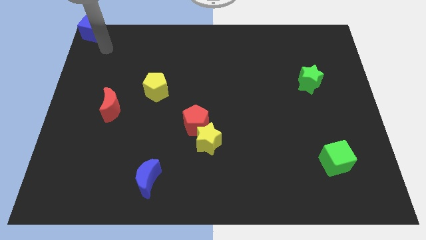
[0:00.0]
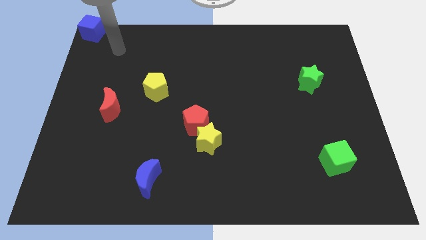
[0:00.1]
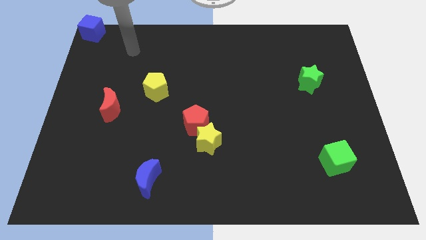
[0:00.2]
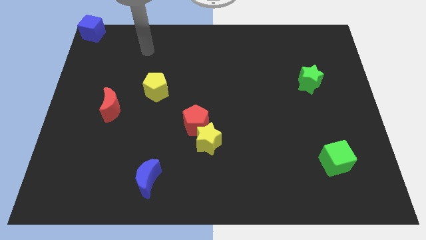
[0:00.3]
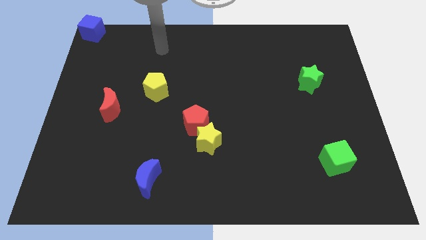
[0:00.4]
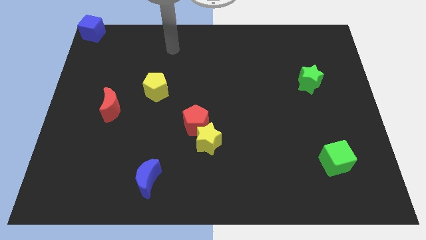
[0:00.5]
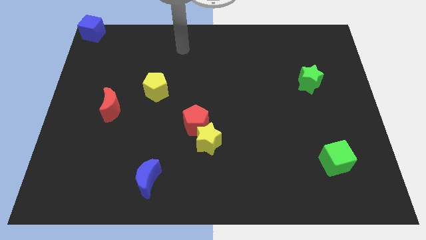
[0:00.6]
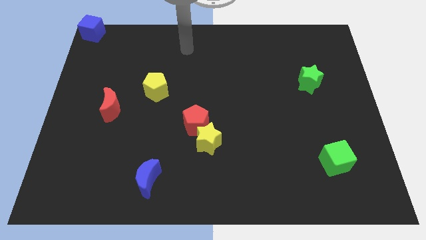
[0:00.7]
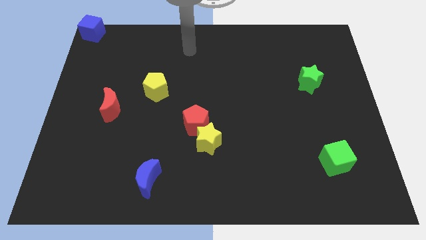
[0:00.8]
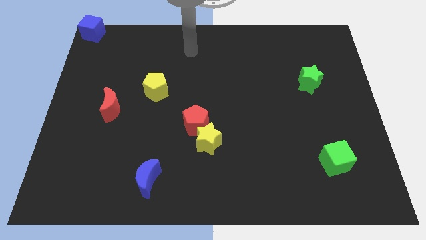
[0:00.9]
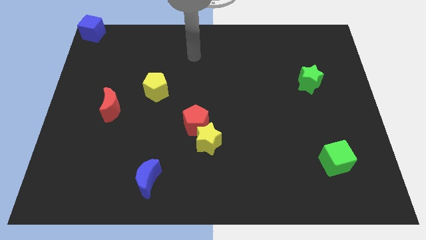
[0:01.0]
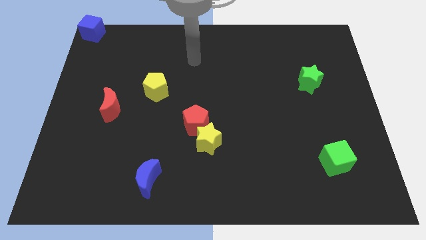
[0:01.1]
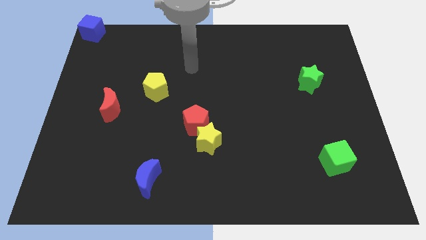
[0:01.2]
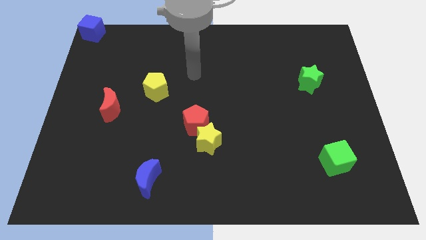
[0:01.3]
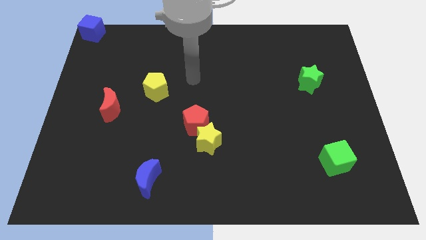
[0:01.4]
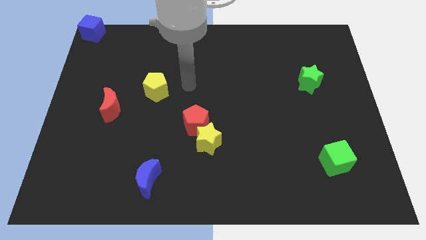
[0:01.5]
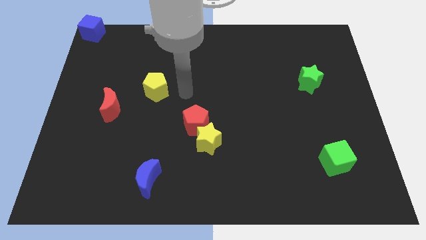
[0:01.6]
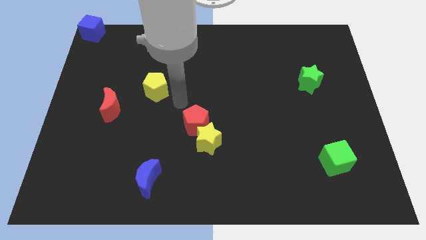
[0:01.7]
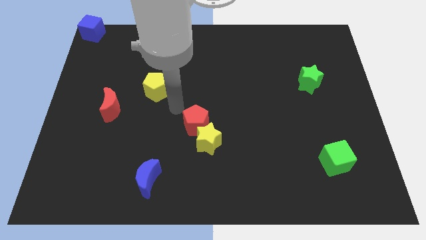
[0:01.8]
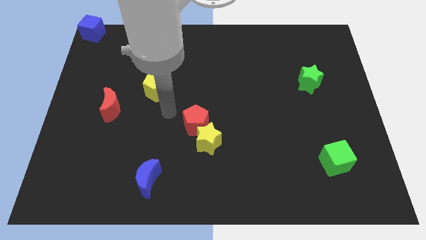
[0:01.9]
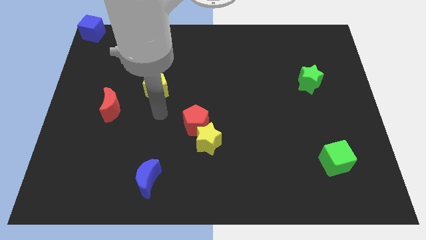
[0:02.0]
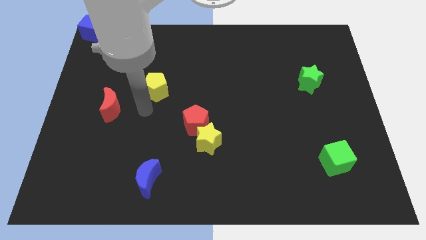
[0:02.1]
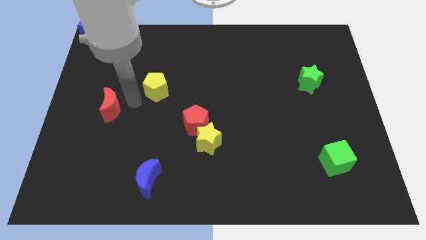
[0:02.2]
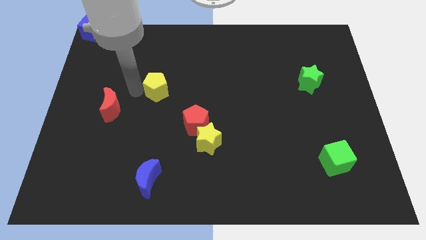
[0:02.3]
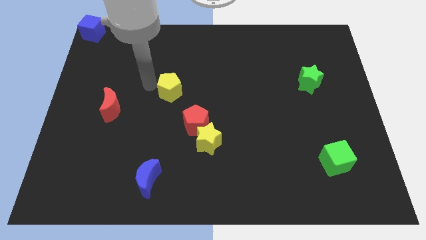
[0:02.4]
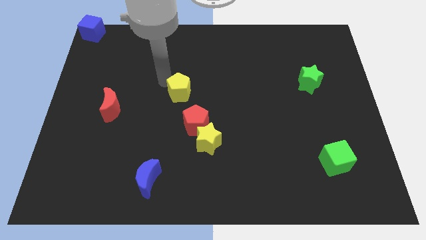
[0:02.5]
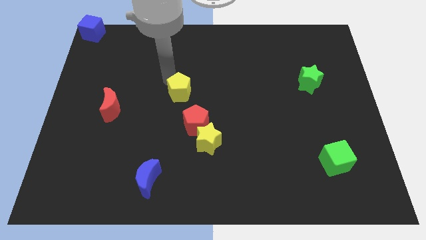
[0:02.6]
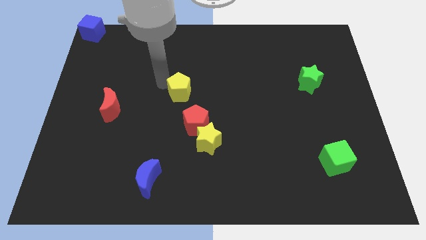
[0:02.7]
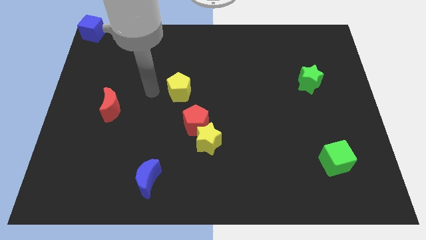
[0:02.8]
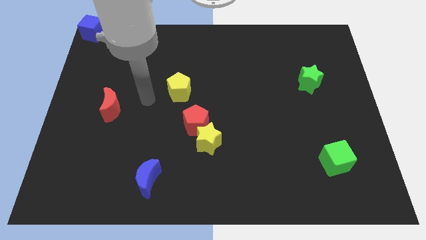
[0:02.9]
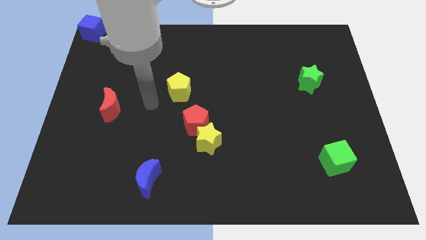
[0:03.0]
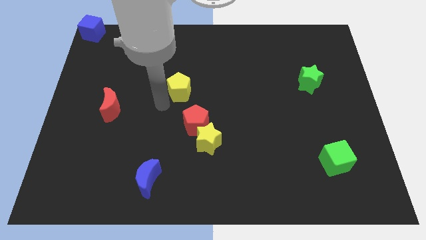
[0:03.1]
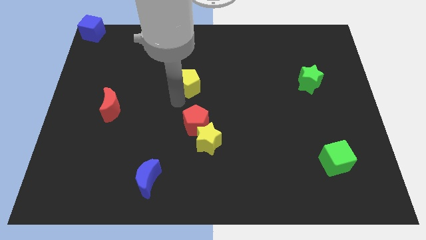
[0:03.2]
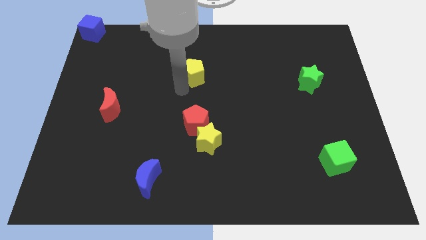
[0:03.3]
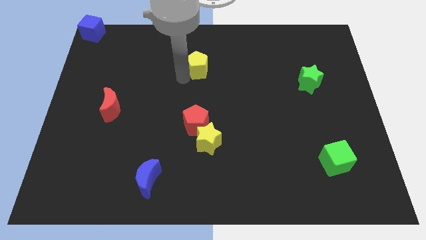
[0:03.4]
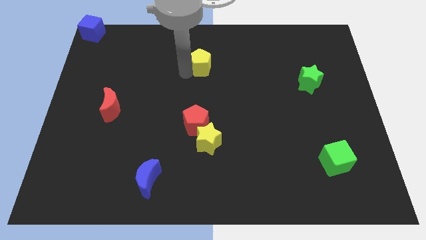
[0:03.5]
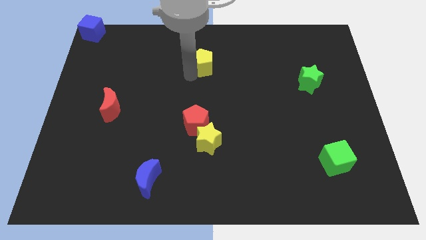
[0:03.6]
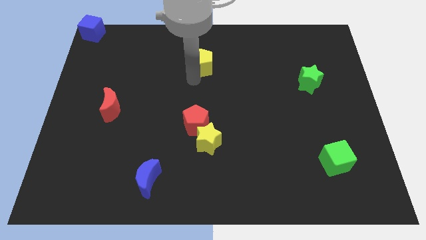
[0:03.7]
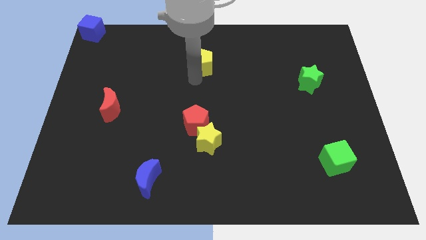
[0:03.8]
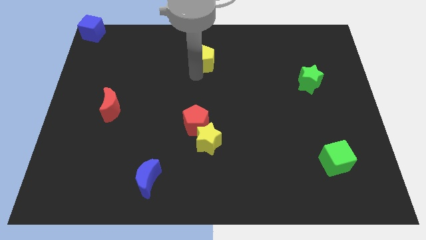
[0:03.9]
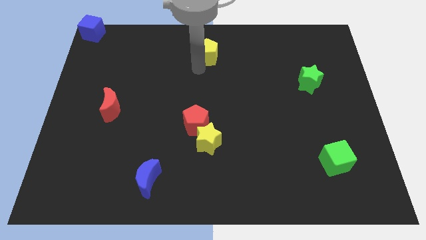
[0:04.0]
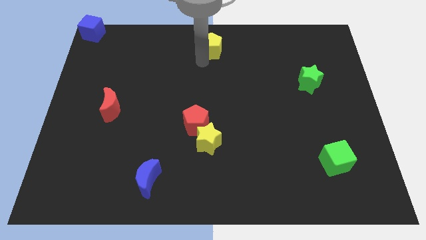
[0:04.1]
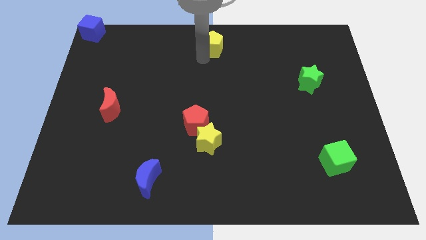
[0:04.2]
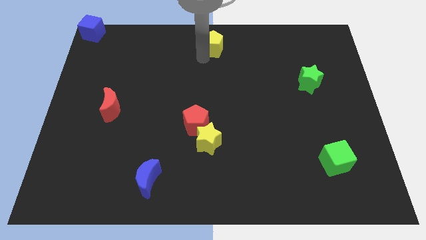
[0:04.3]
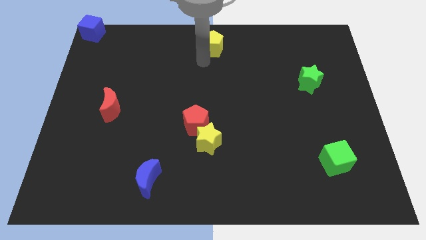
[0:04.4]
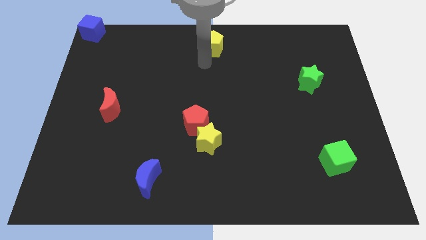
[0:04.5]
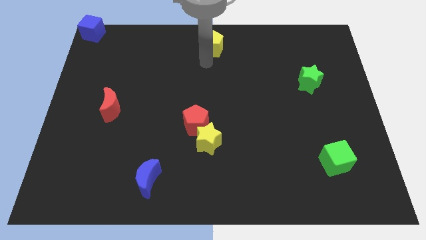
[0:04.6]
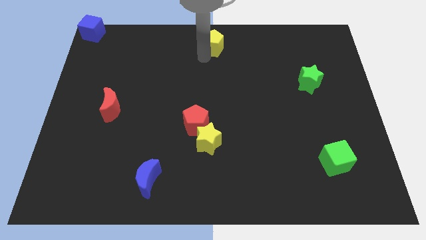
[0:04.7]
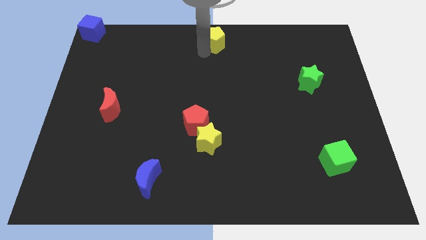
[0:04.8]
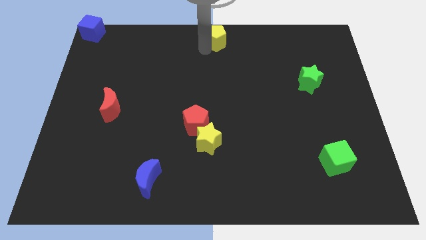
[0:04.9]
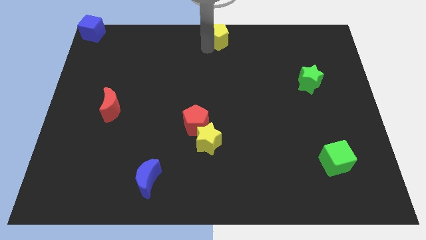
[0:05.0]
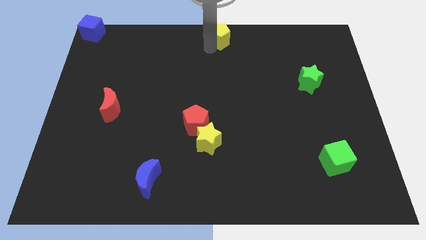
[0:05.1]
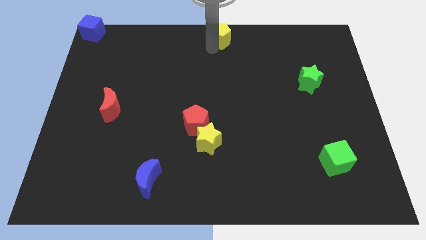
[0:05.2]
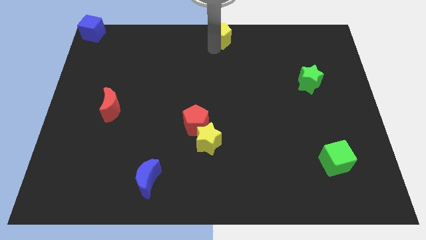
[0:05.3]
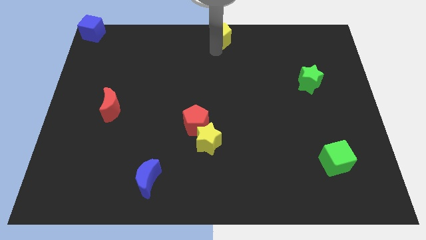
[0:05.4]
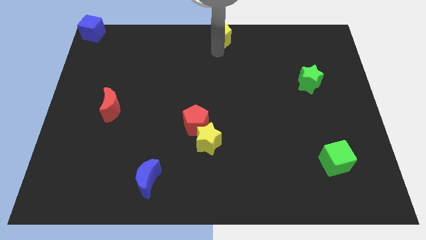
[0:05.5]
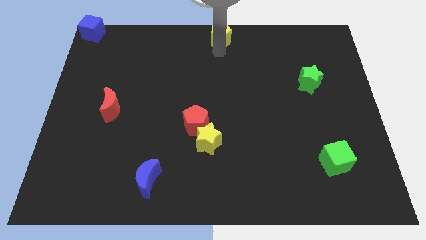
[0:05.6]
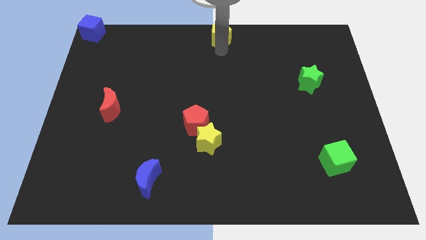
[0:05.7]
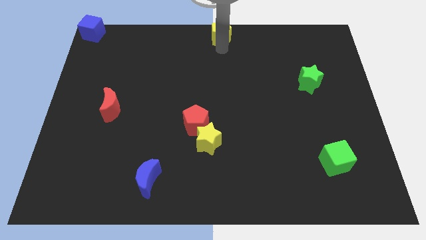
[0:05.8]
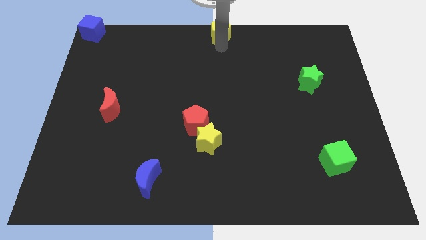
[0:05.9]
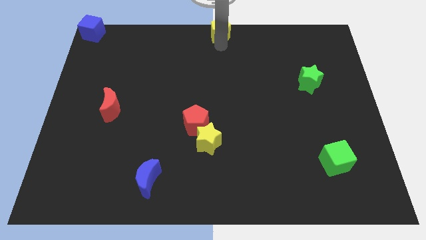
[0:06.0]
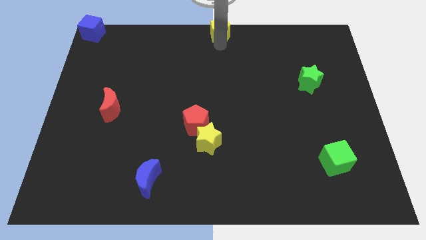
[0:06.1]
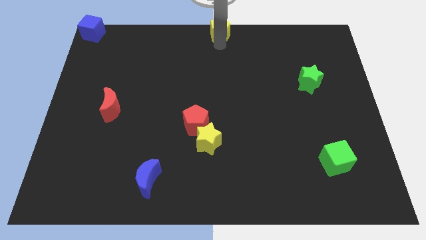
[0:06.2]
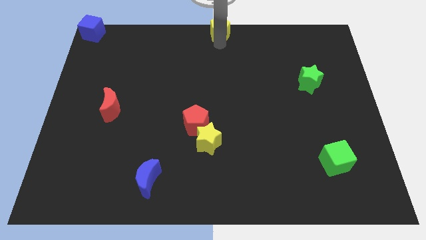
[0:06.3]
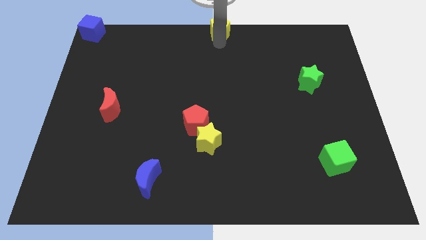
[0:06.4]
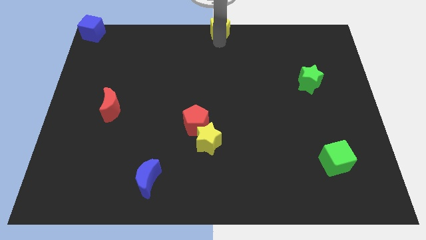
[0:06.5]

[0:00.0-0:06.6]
drag yellow pentagon towards top center

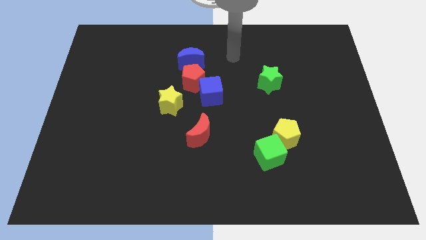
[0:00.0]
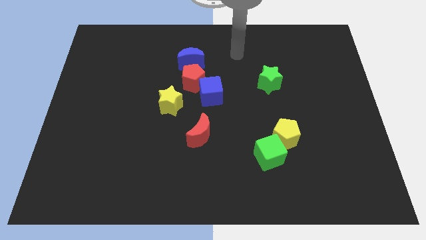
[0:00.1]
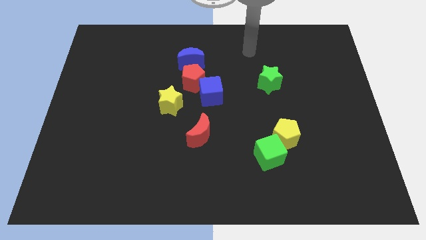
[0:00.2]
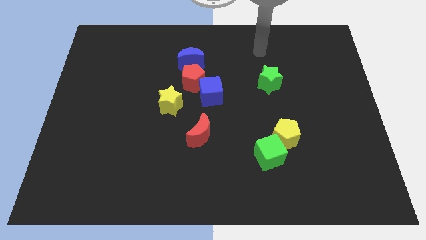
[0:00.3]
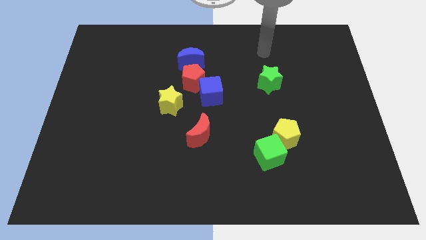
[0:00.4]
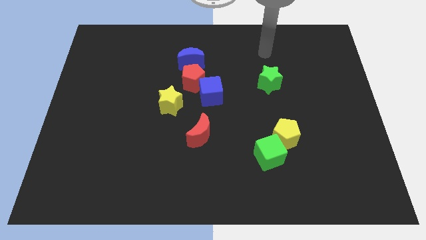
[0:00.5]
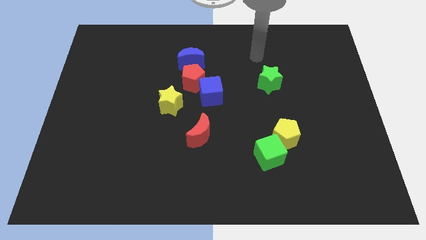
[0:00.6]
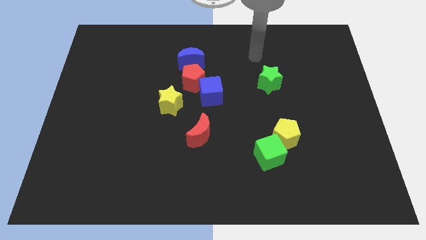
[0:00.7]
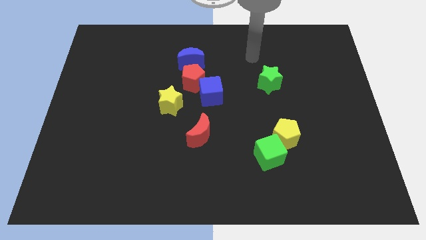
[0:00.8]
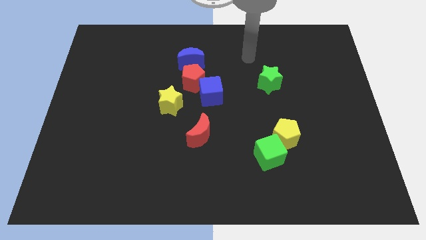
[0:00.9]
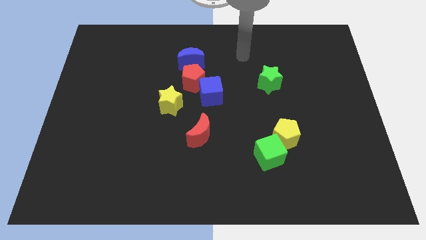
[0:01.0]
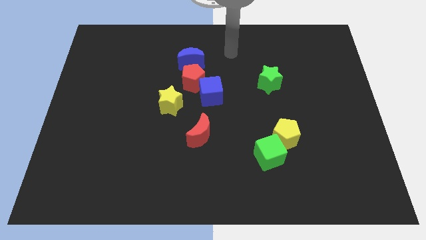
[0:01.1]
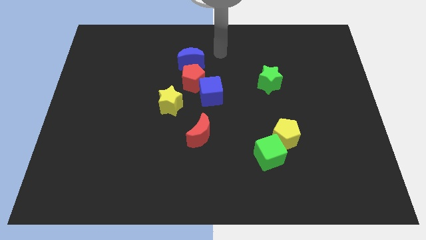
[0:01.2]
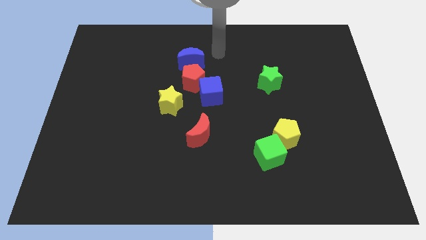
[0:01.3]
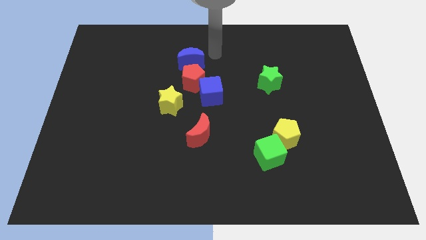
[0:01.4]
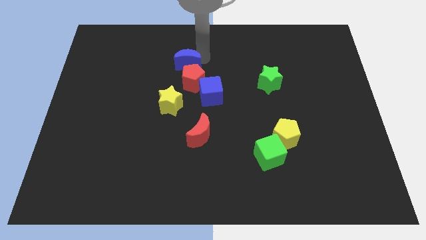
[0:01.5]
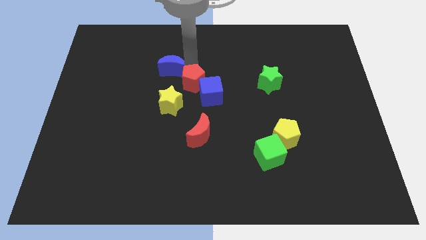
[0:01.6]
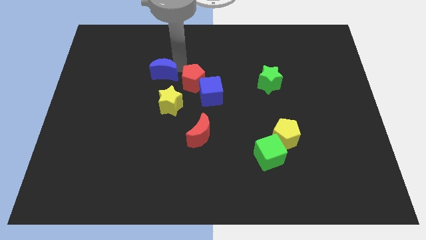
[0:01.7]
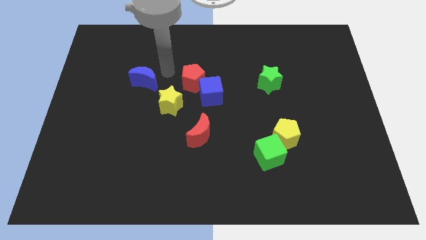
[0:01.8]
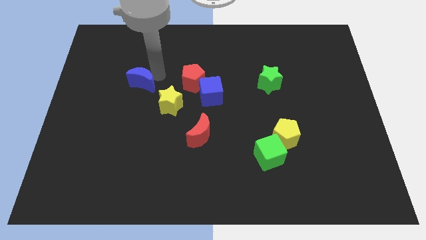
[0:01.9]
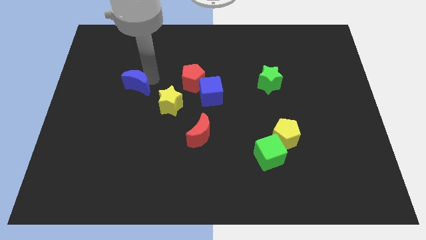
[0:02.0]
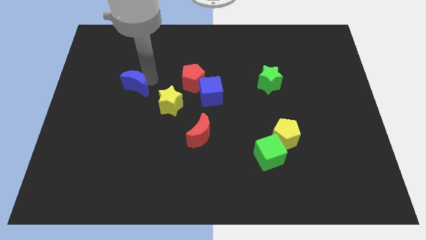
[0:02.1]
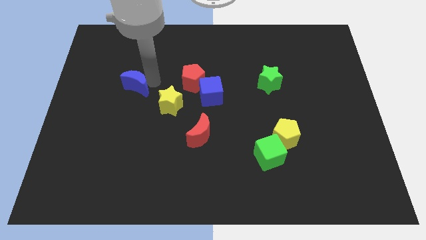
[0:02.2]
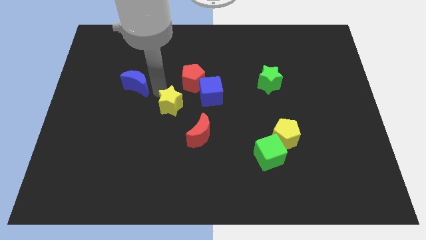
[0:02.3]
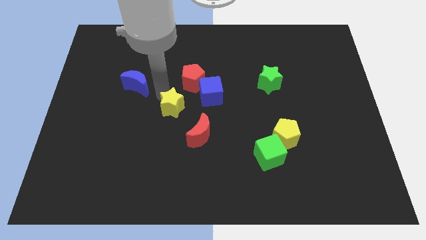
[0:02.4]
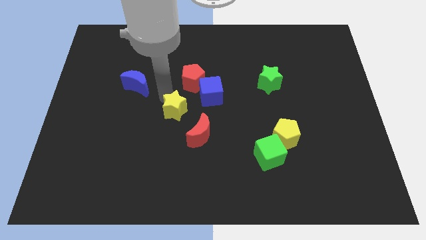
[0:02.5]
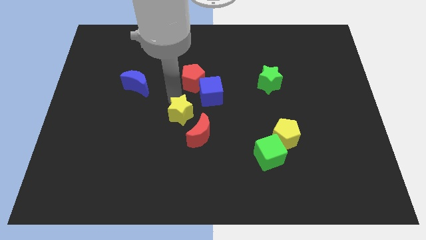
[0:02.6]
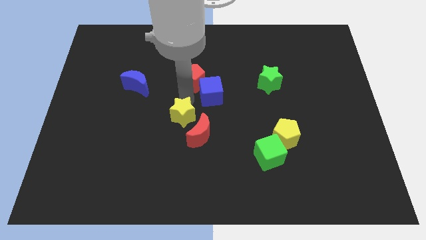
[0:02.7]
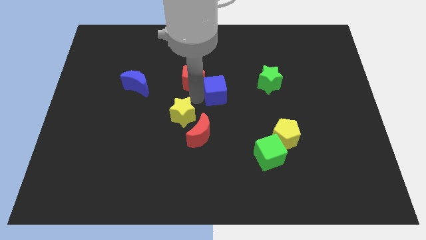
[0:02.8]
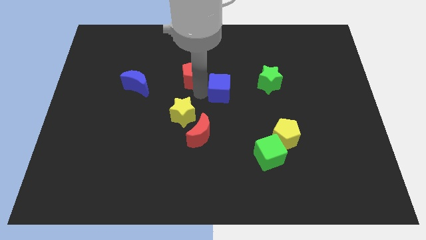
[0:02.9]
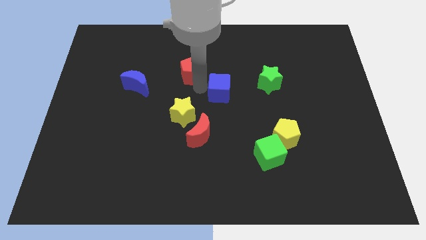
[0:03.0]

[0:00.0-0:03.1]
move the blue crescent towards the left
